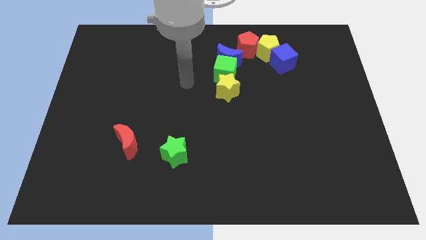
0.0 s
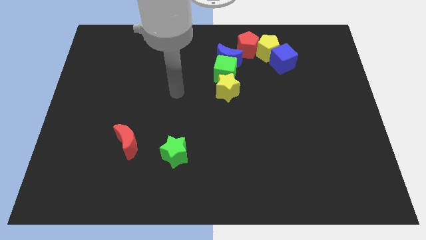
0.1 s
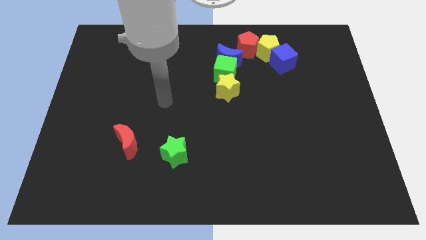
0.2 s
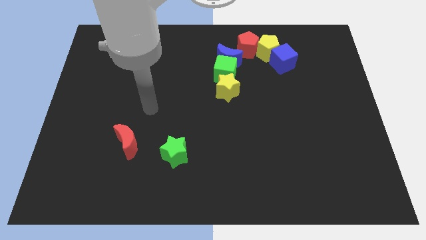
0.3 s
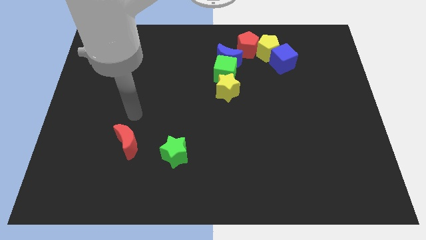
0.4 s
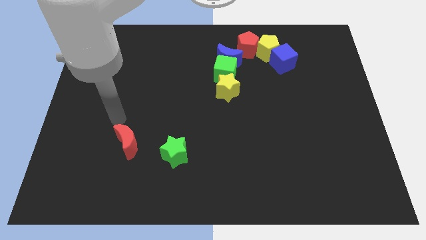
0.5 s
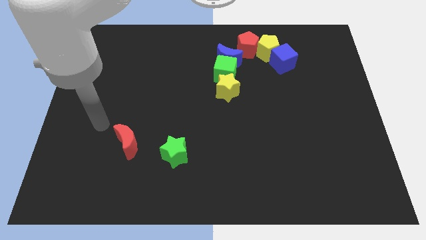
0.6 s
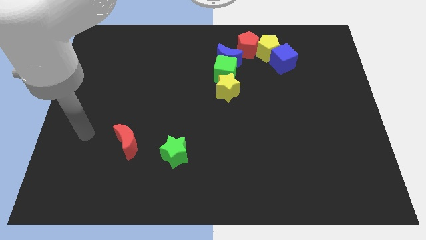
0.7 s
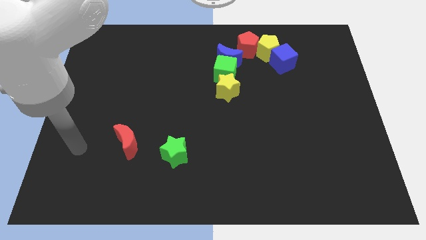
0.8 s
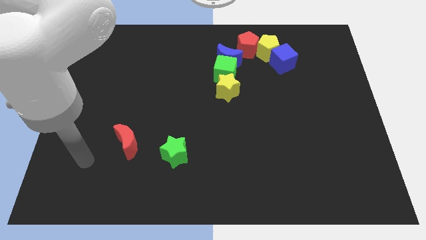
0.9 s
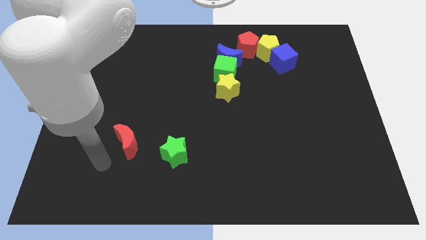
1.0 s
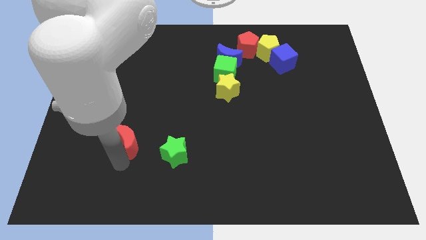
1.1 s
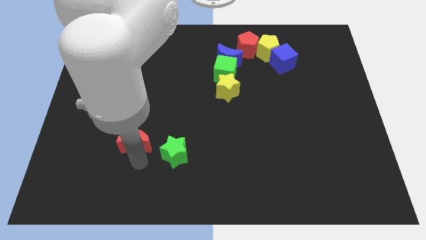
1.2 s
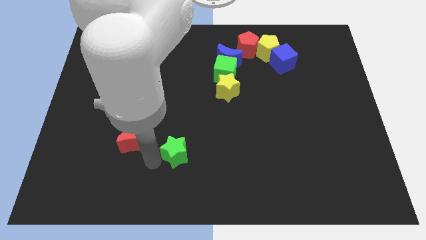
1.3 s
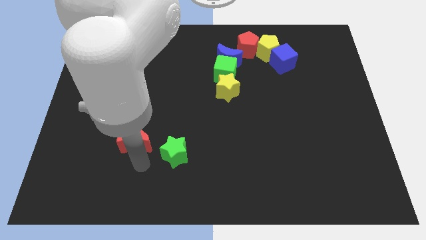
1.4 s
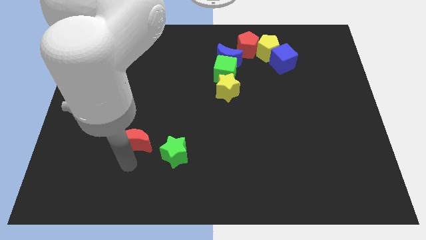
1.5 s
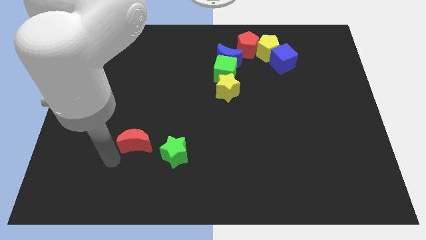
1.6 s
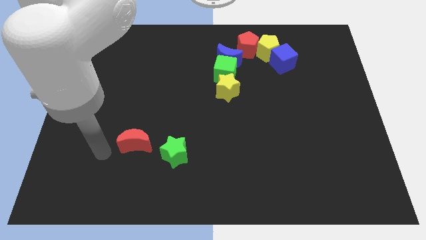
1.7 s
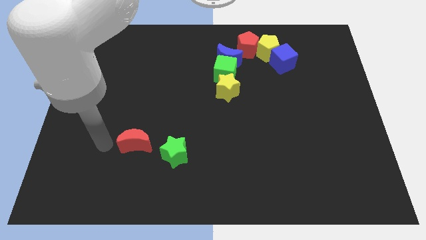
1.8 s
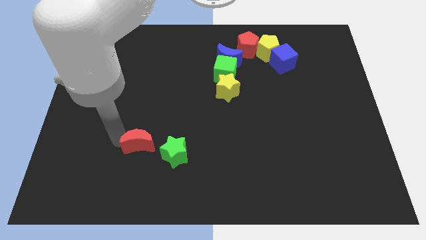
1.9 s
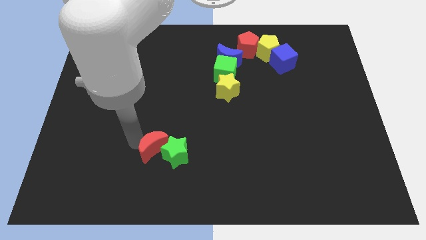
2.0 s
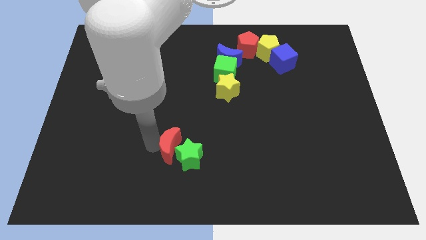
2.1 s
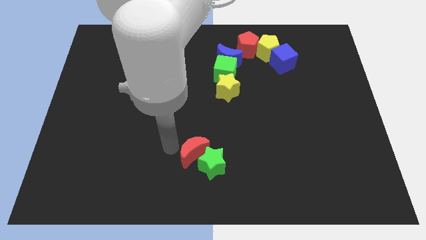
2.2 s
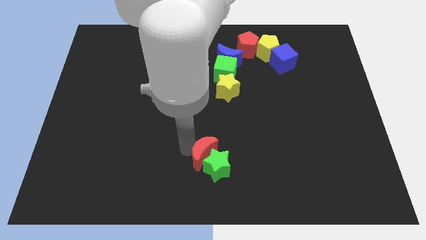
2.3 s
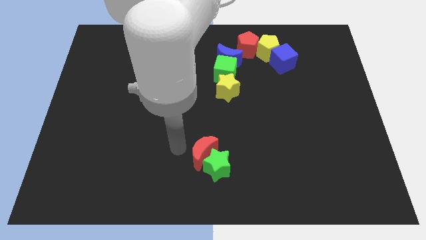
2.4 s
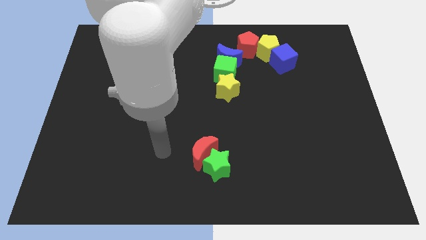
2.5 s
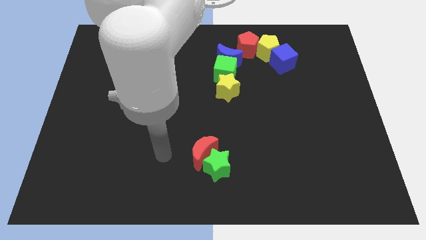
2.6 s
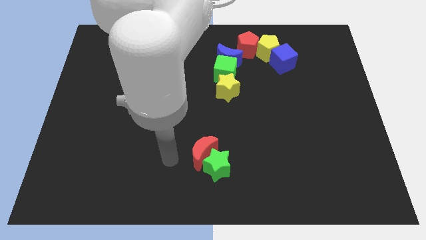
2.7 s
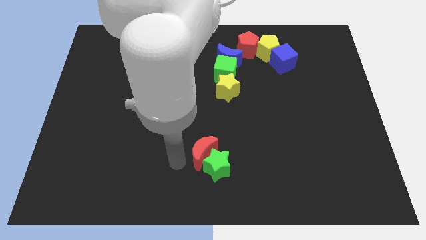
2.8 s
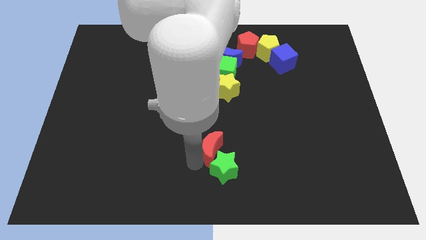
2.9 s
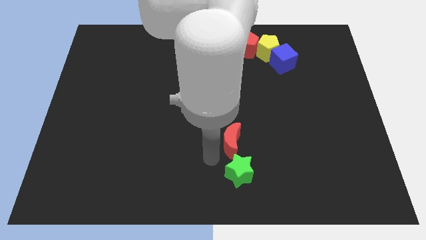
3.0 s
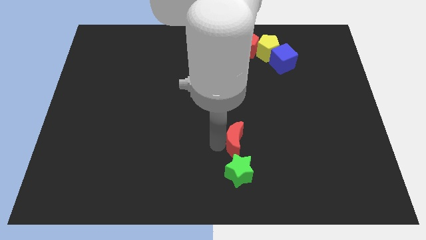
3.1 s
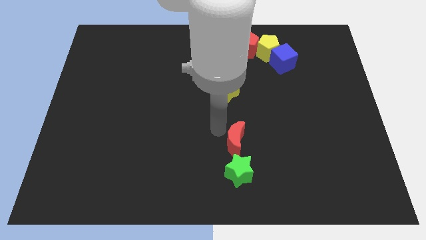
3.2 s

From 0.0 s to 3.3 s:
push the red moon into the green star

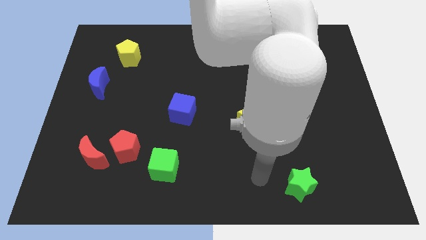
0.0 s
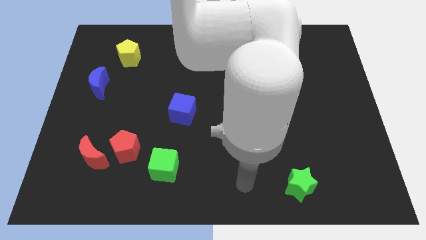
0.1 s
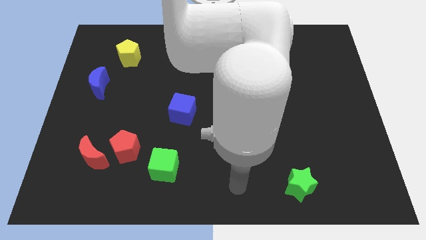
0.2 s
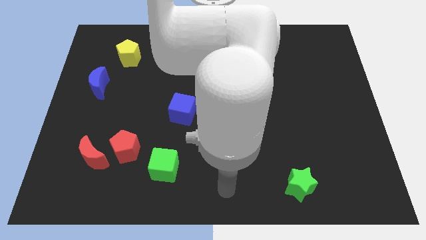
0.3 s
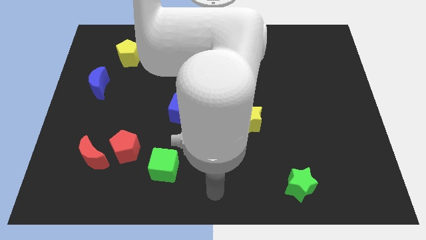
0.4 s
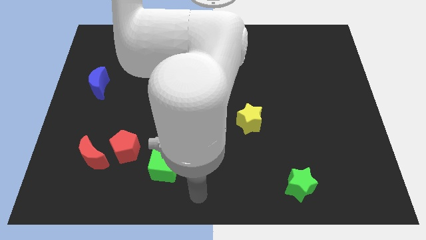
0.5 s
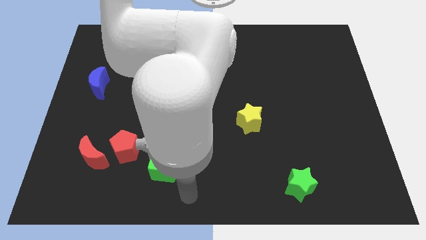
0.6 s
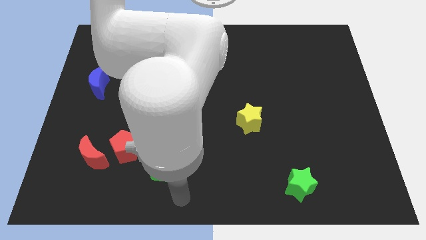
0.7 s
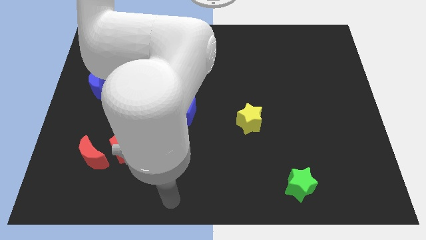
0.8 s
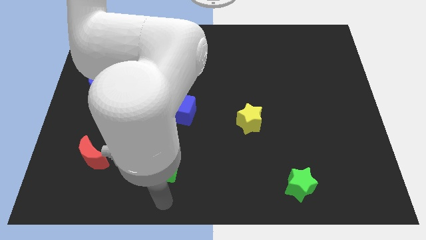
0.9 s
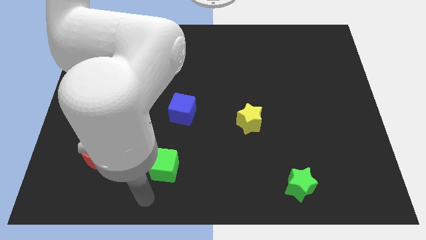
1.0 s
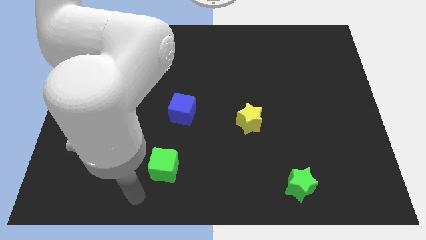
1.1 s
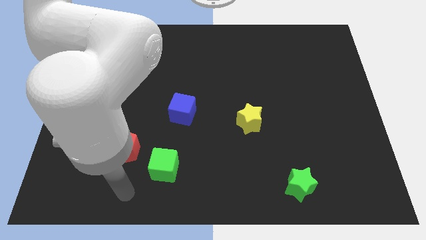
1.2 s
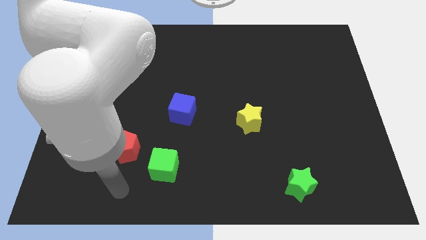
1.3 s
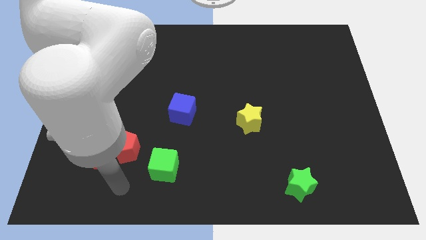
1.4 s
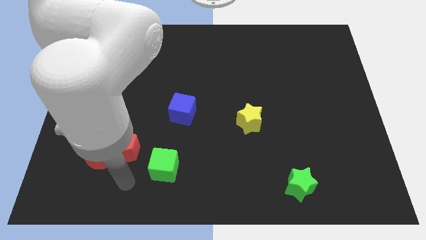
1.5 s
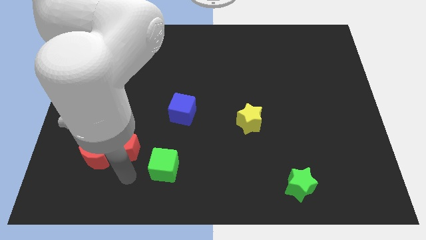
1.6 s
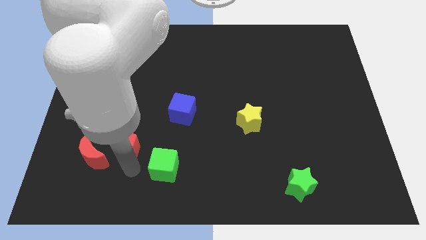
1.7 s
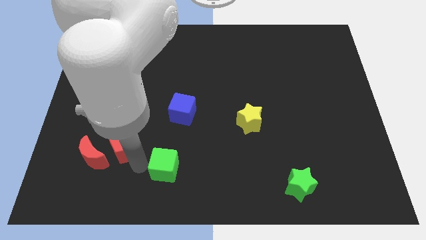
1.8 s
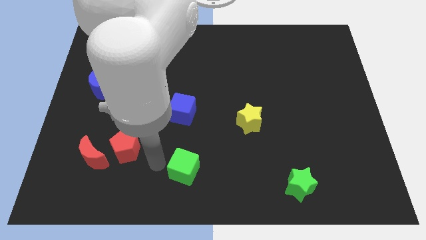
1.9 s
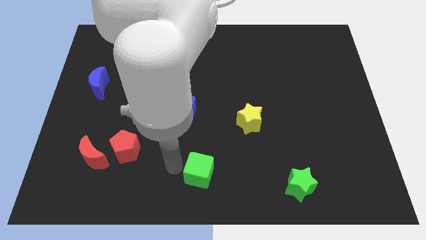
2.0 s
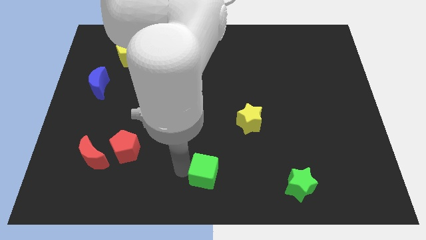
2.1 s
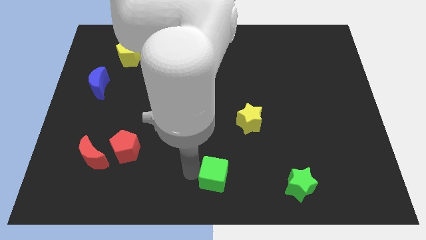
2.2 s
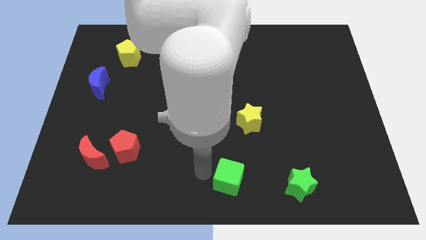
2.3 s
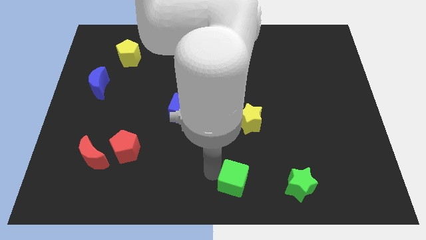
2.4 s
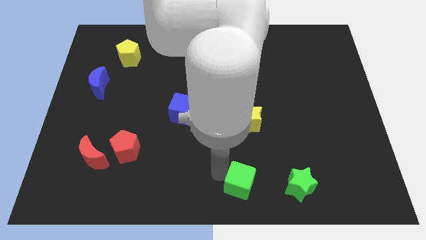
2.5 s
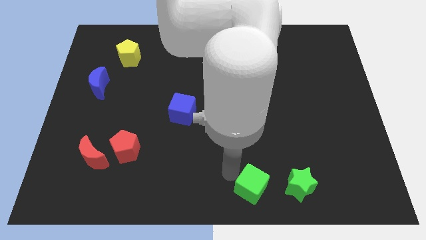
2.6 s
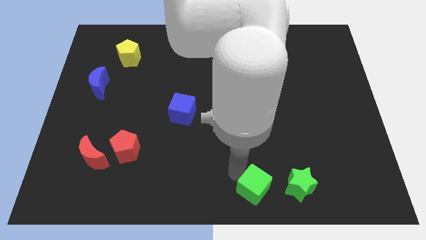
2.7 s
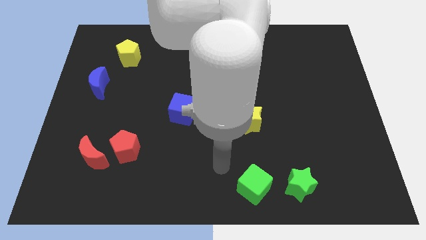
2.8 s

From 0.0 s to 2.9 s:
slide the green cube to the left of the green star

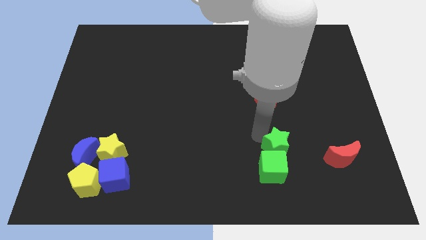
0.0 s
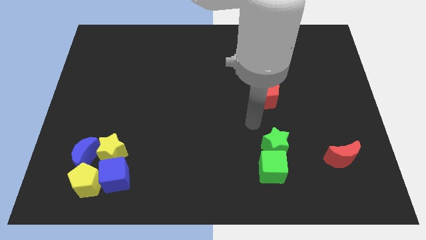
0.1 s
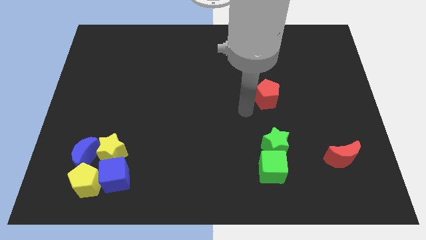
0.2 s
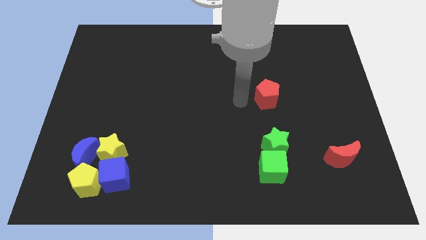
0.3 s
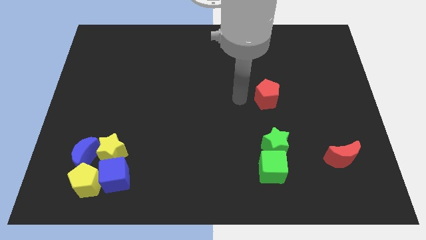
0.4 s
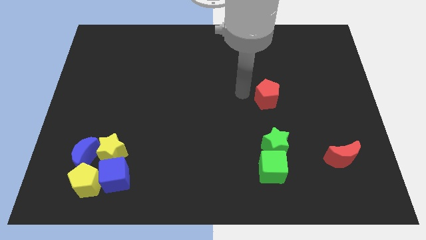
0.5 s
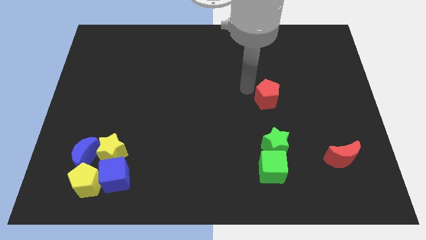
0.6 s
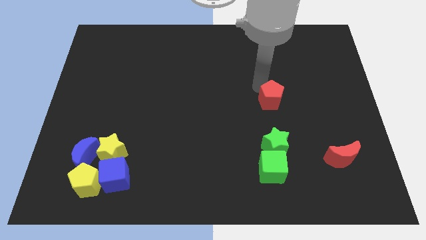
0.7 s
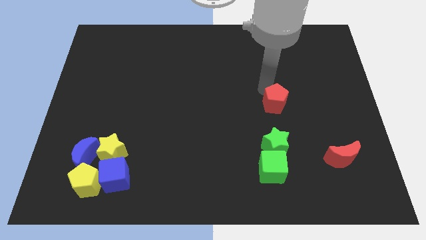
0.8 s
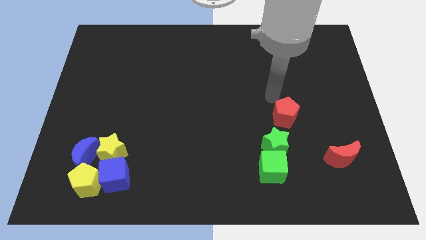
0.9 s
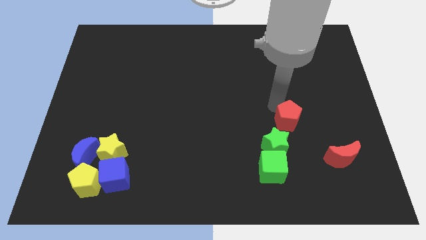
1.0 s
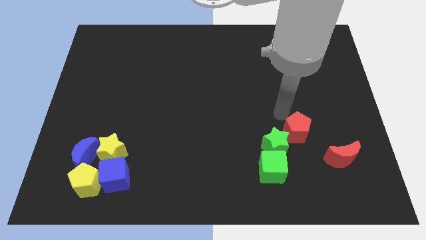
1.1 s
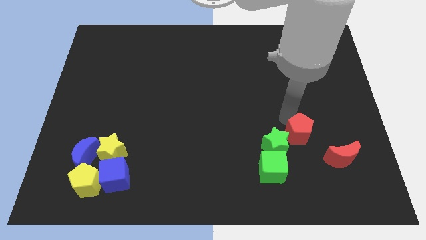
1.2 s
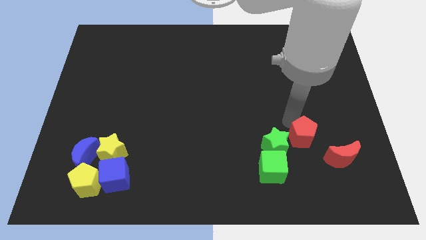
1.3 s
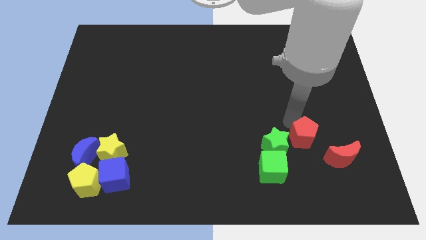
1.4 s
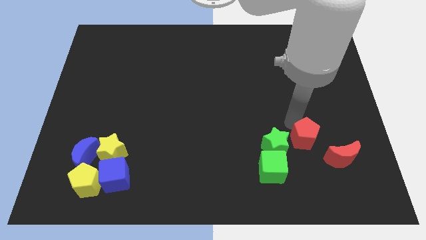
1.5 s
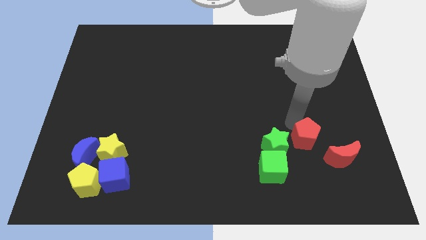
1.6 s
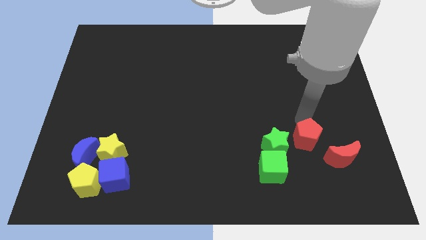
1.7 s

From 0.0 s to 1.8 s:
place red pentagon to the right side of green star

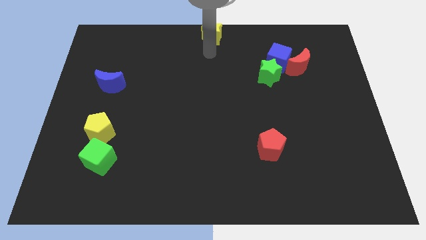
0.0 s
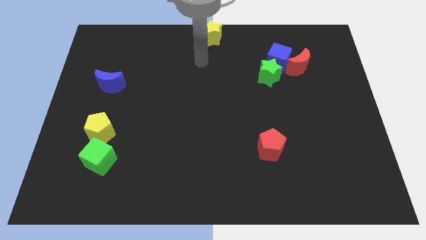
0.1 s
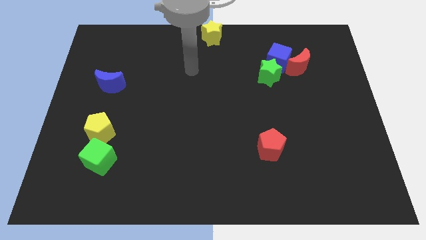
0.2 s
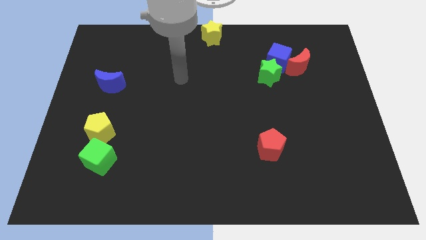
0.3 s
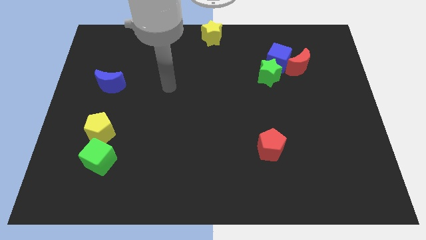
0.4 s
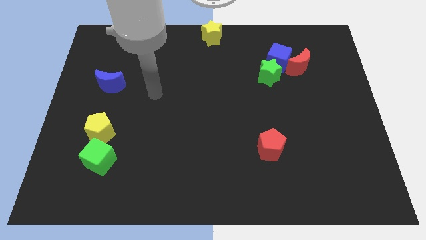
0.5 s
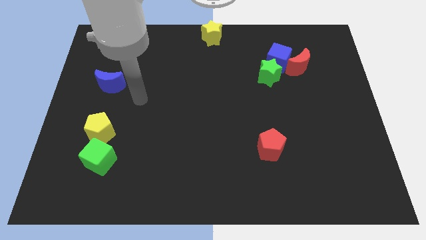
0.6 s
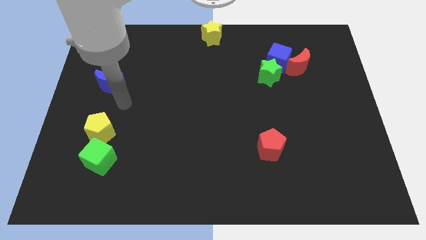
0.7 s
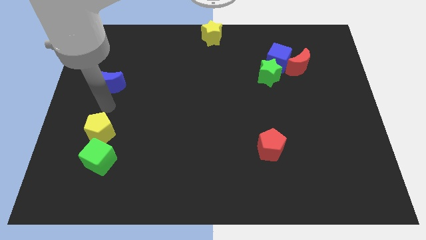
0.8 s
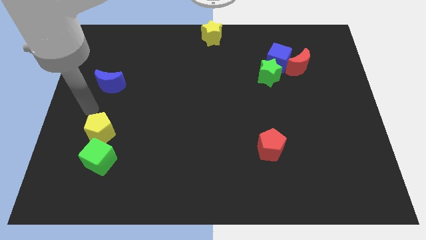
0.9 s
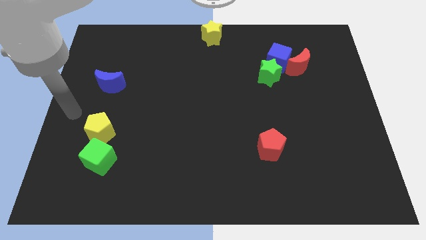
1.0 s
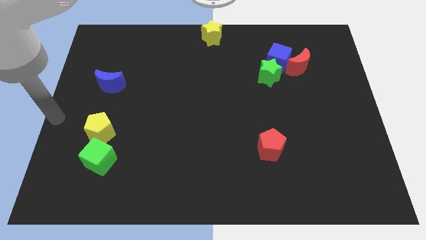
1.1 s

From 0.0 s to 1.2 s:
put your arm at the center left
